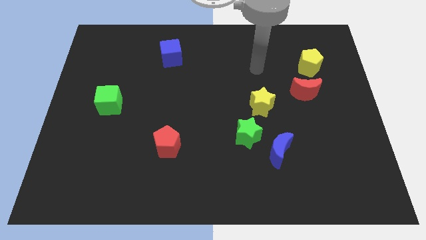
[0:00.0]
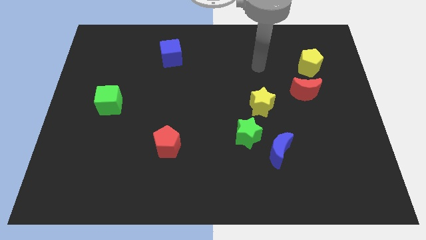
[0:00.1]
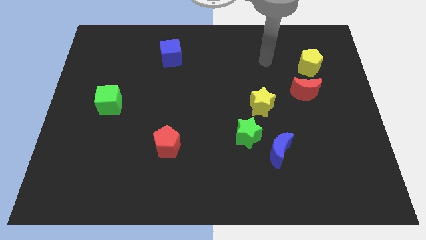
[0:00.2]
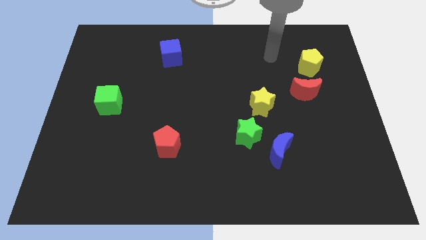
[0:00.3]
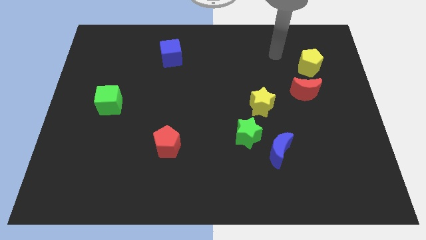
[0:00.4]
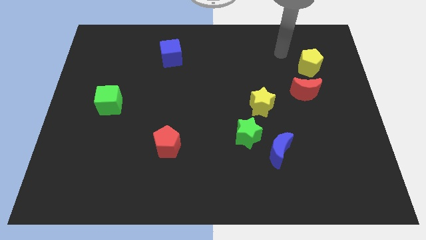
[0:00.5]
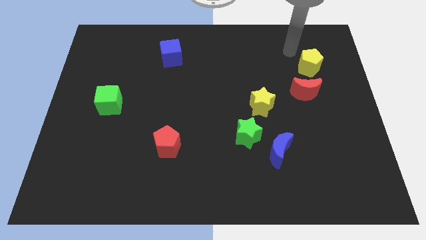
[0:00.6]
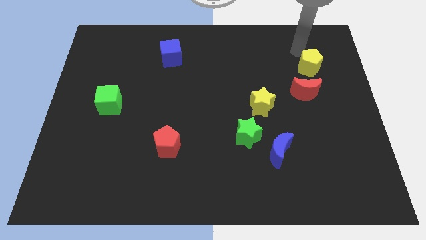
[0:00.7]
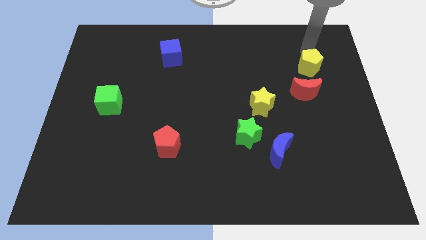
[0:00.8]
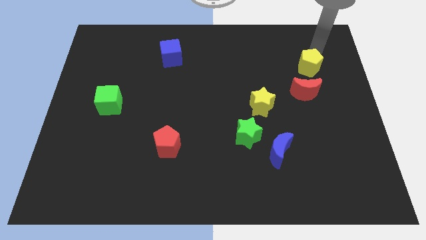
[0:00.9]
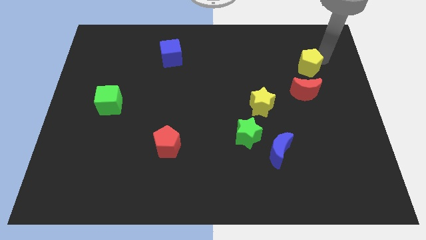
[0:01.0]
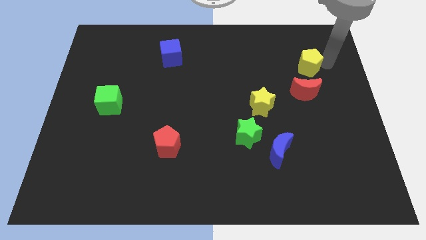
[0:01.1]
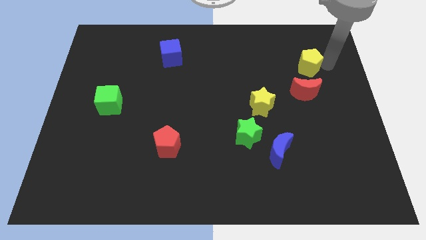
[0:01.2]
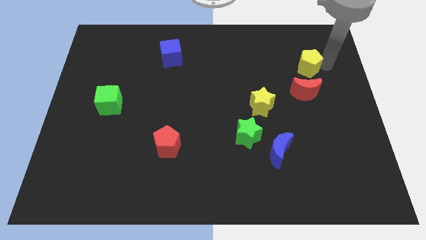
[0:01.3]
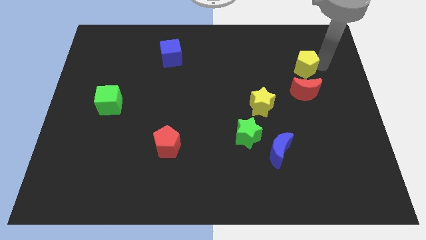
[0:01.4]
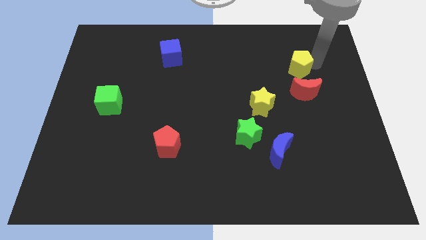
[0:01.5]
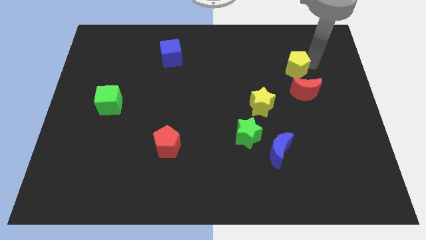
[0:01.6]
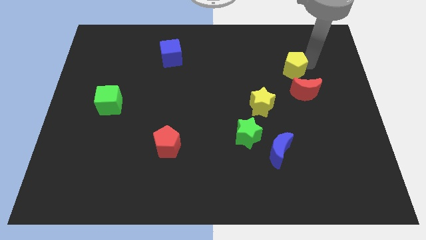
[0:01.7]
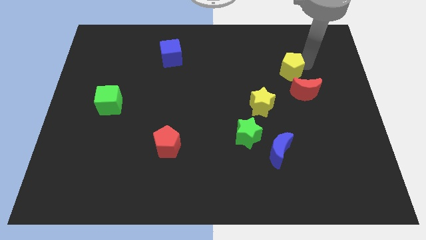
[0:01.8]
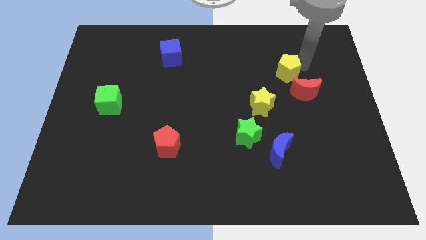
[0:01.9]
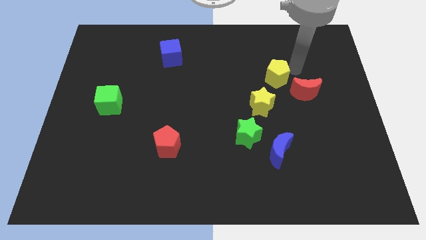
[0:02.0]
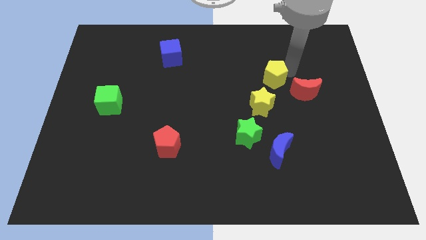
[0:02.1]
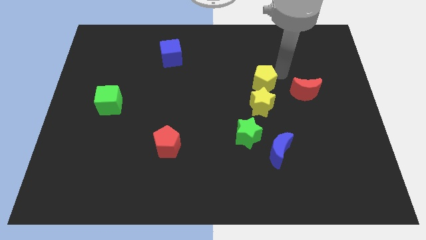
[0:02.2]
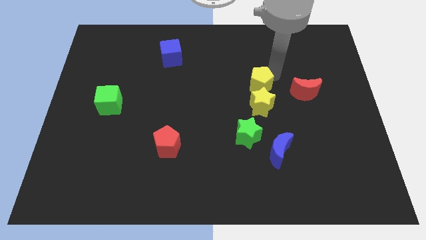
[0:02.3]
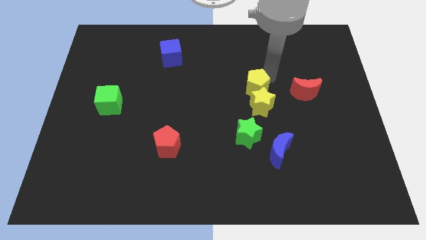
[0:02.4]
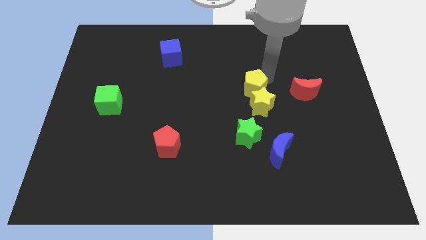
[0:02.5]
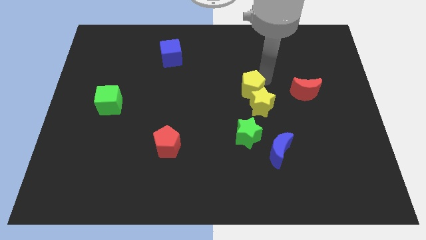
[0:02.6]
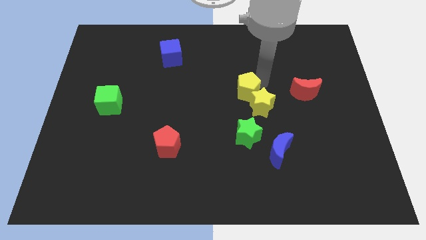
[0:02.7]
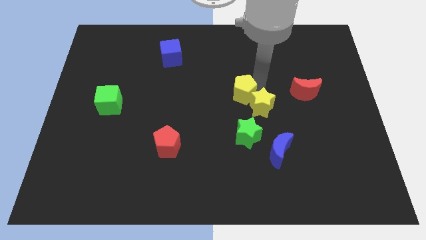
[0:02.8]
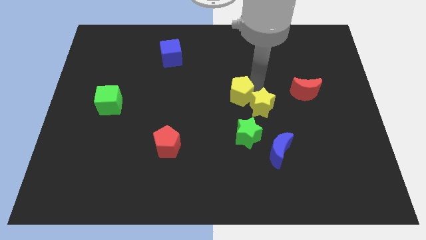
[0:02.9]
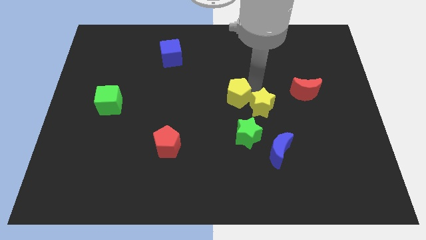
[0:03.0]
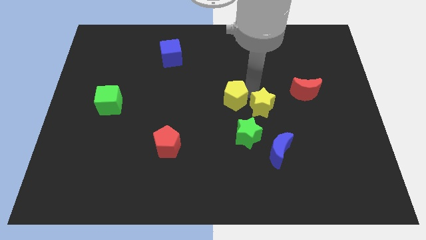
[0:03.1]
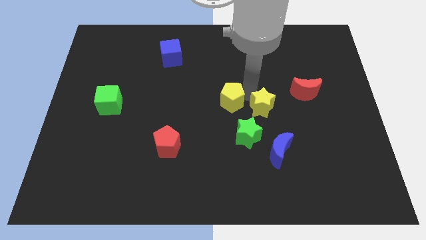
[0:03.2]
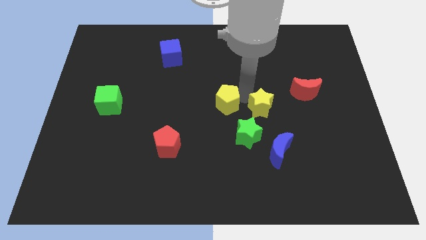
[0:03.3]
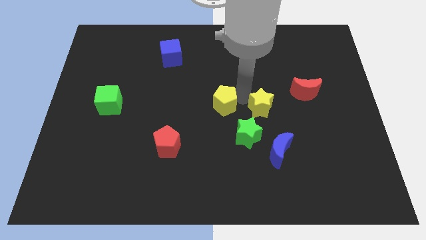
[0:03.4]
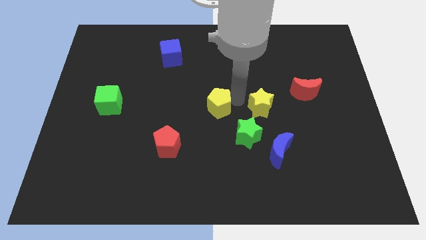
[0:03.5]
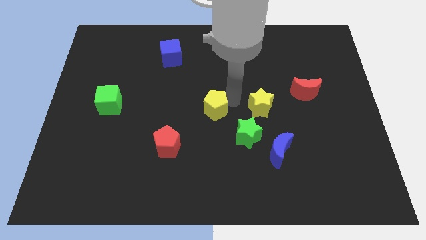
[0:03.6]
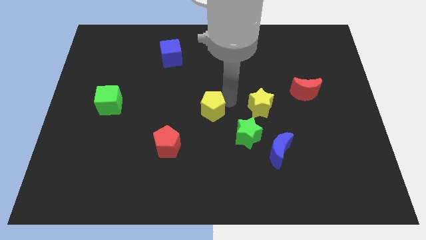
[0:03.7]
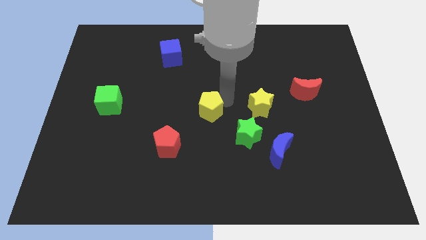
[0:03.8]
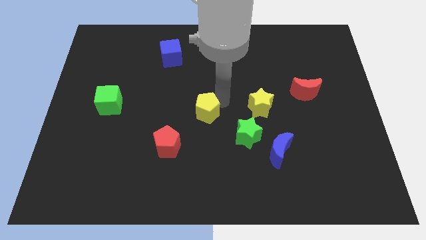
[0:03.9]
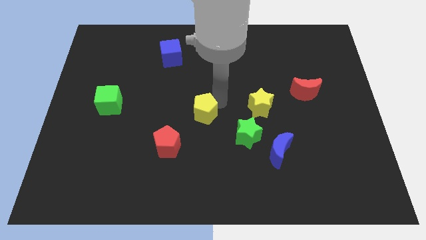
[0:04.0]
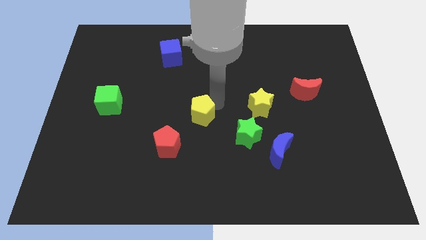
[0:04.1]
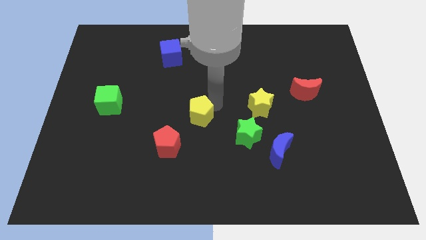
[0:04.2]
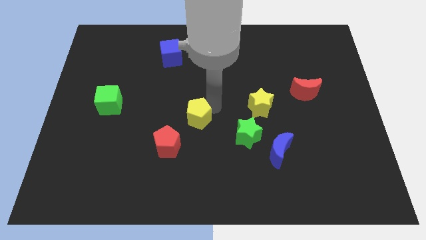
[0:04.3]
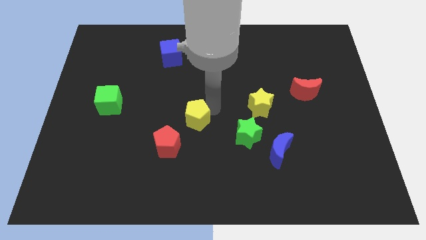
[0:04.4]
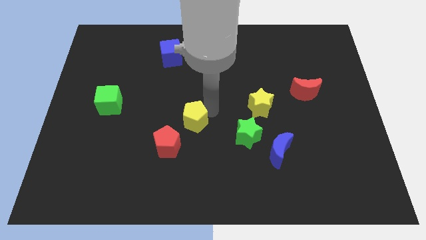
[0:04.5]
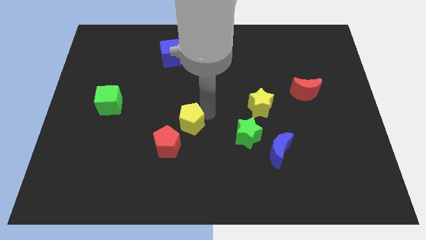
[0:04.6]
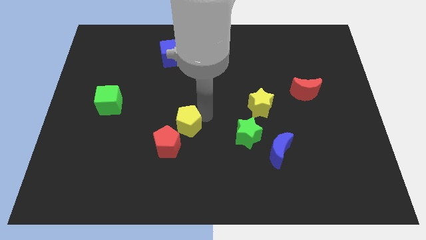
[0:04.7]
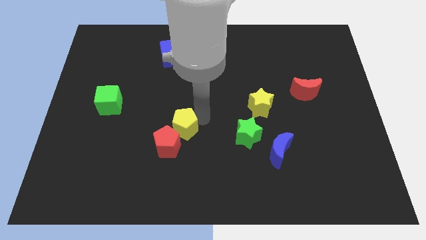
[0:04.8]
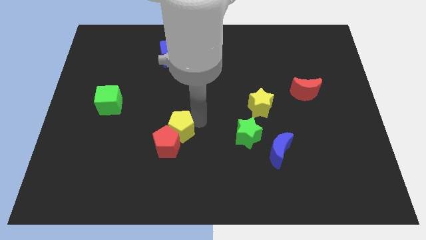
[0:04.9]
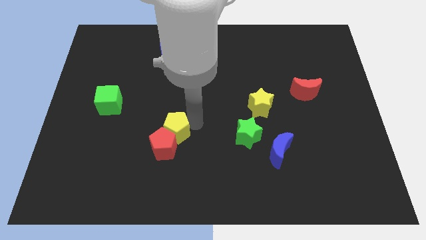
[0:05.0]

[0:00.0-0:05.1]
slide the yellow pentagon close to the red pentagon

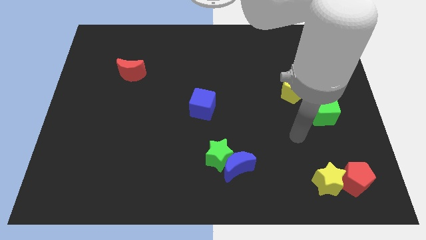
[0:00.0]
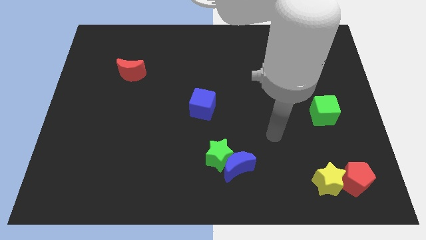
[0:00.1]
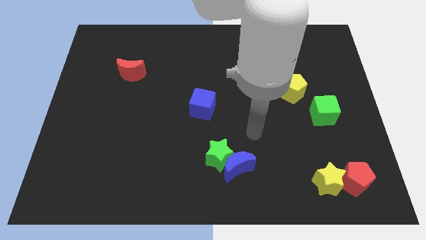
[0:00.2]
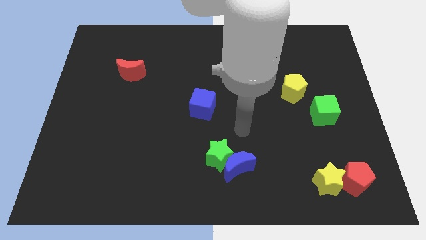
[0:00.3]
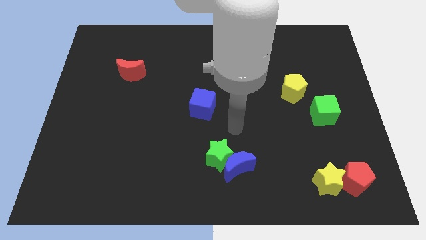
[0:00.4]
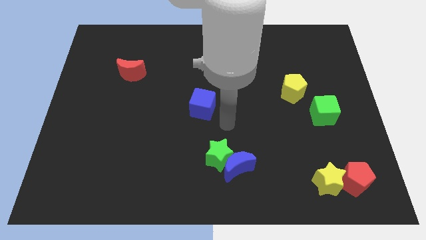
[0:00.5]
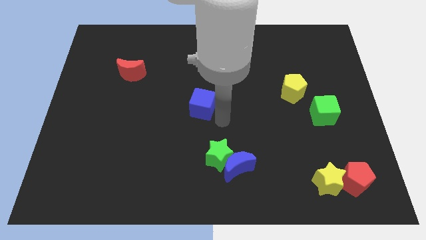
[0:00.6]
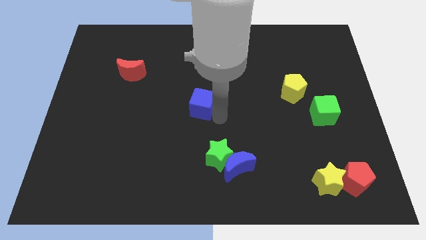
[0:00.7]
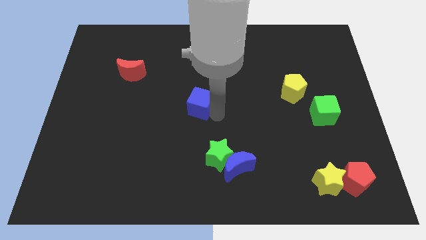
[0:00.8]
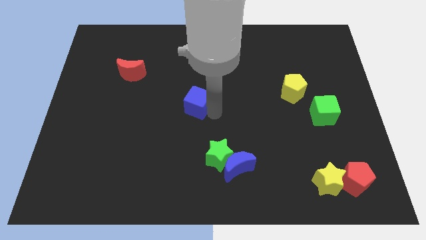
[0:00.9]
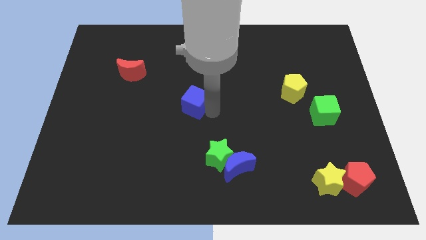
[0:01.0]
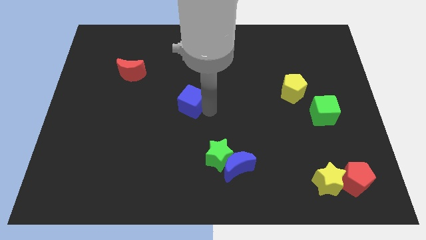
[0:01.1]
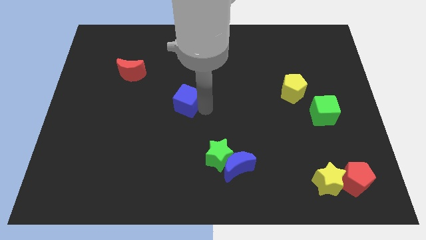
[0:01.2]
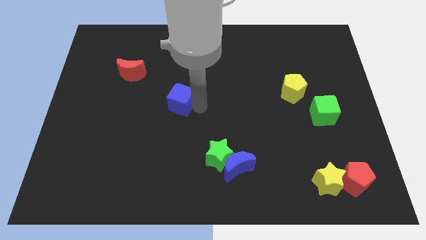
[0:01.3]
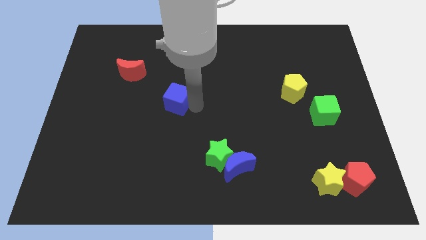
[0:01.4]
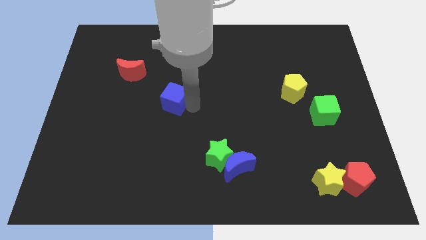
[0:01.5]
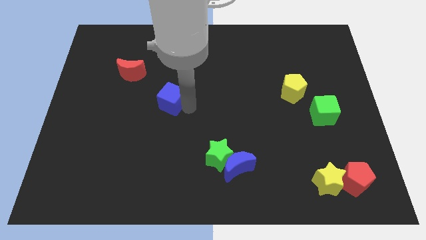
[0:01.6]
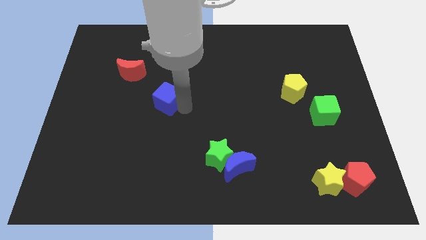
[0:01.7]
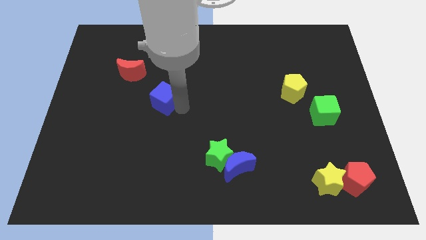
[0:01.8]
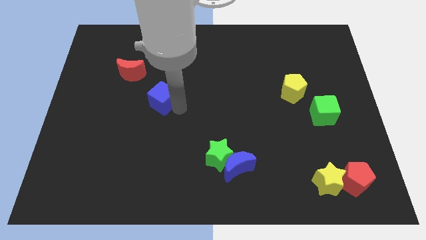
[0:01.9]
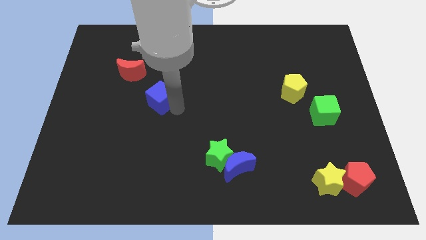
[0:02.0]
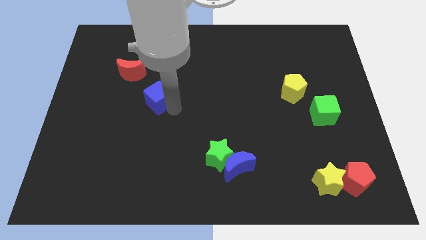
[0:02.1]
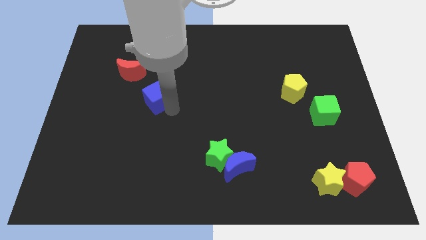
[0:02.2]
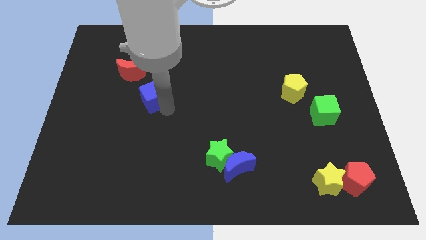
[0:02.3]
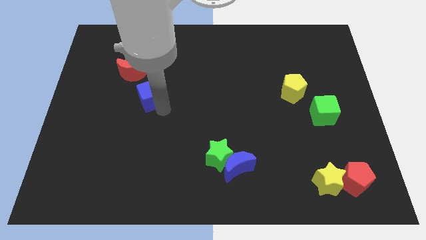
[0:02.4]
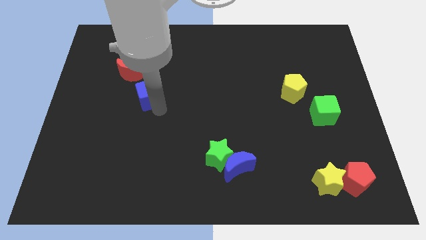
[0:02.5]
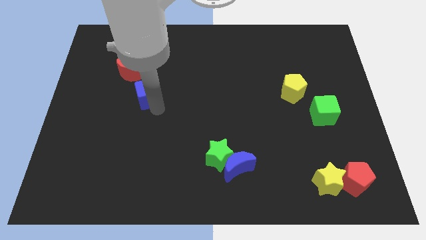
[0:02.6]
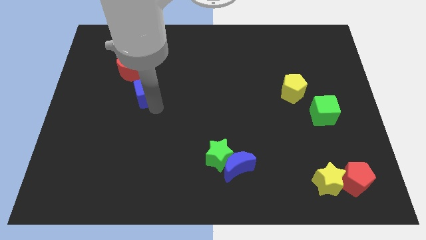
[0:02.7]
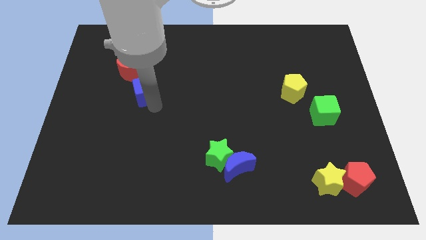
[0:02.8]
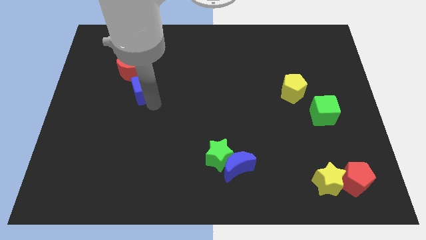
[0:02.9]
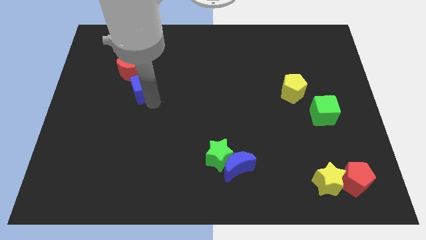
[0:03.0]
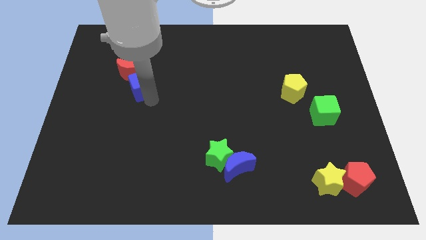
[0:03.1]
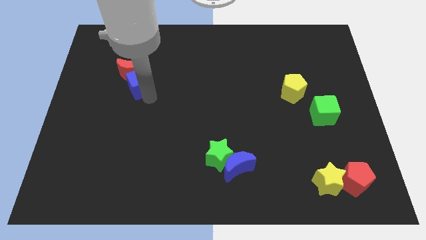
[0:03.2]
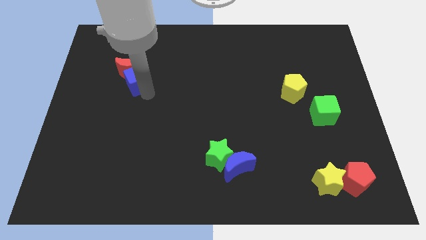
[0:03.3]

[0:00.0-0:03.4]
slide the blue cube close to the red moon

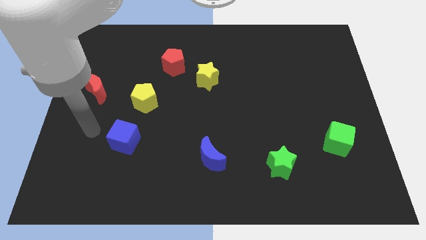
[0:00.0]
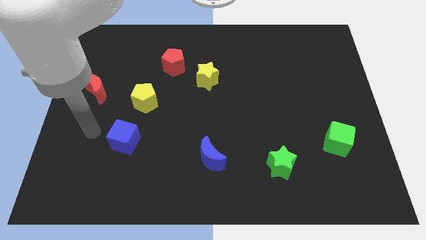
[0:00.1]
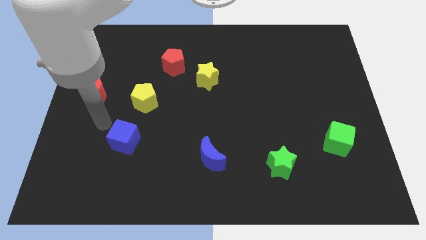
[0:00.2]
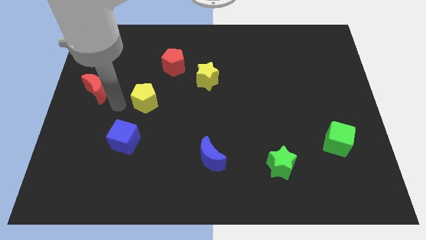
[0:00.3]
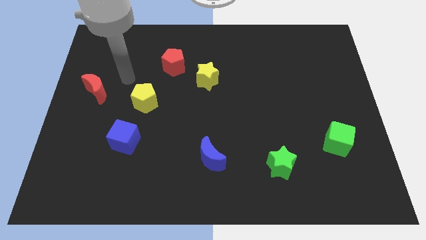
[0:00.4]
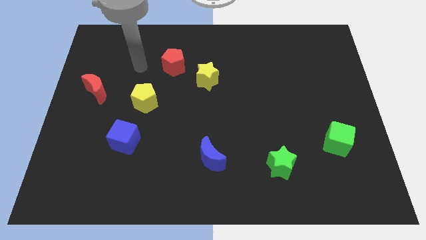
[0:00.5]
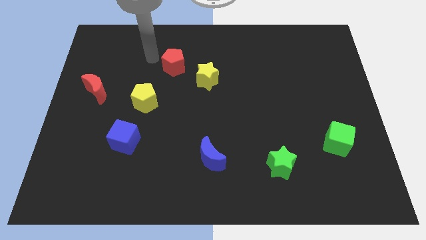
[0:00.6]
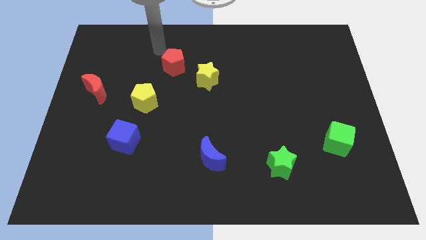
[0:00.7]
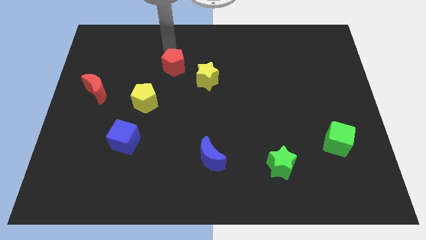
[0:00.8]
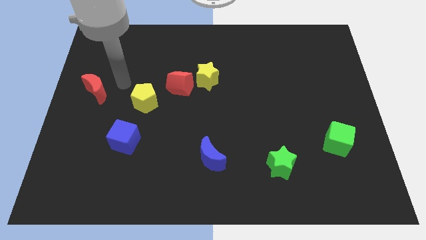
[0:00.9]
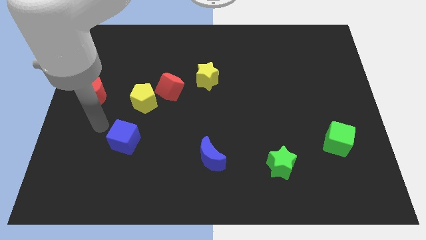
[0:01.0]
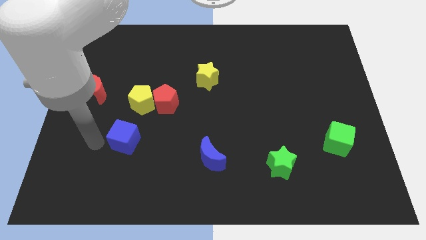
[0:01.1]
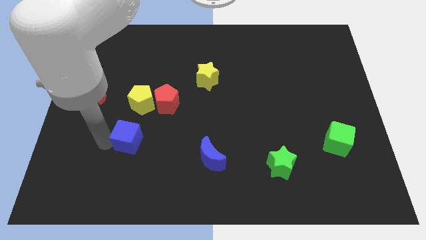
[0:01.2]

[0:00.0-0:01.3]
move the red pentagon towards the yellow pentagon
